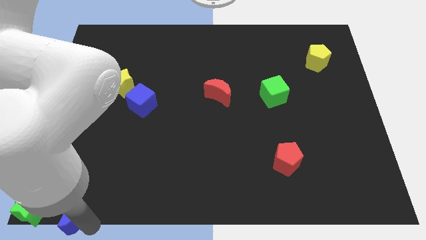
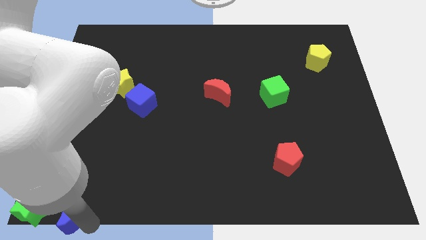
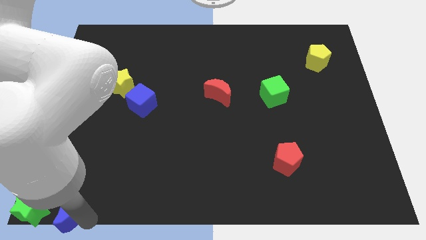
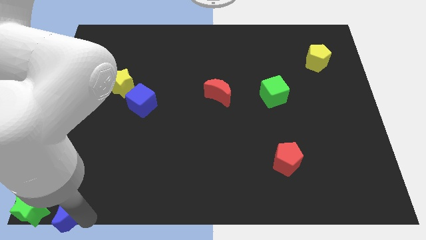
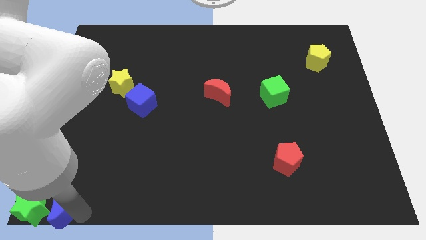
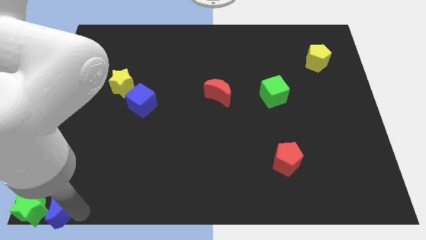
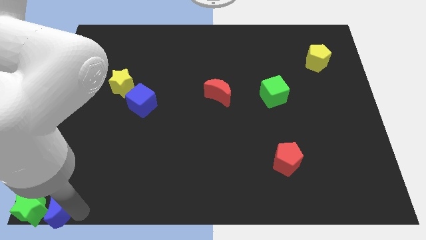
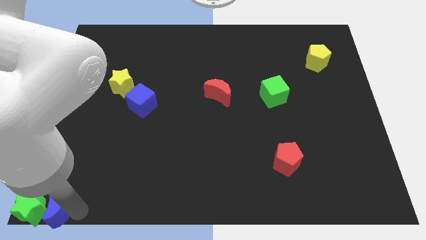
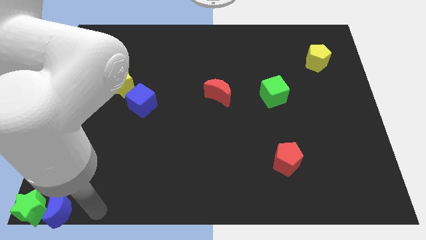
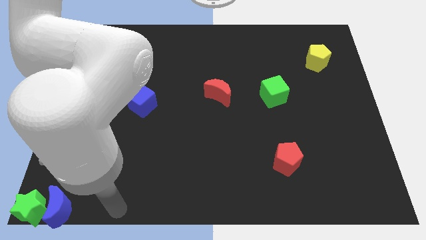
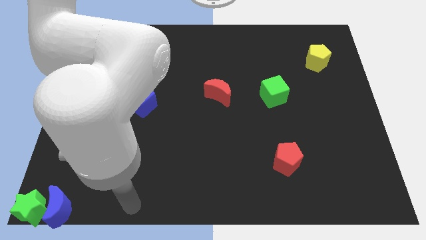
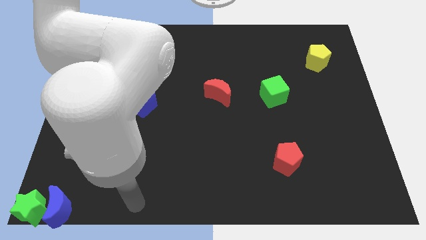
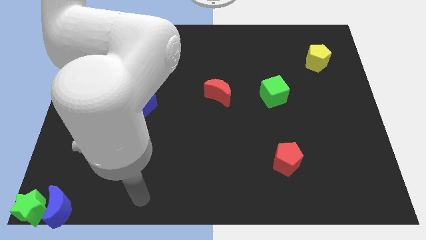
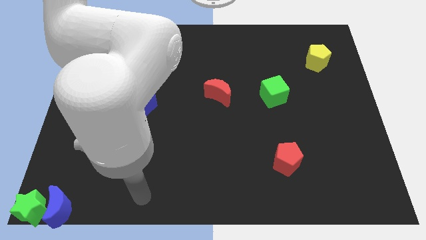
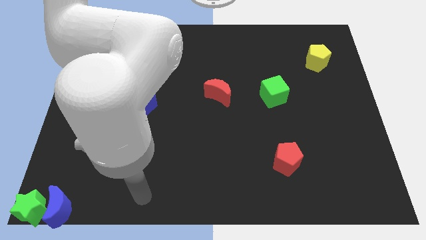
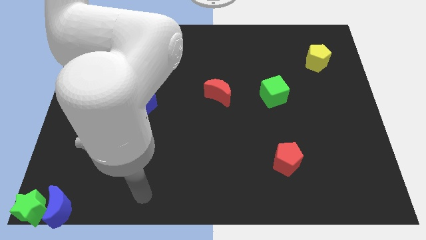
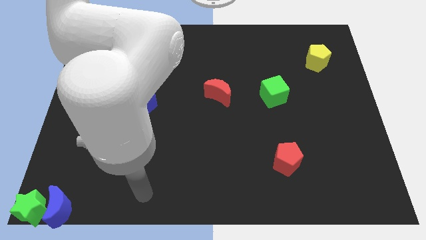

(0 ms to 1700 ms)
move the blue moon to the left of the green star

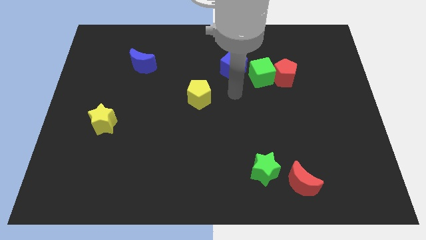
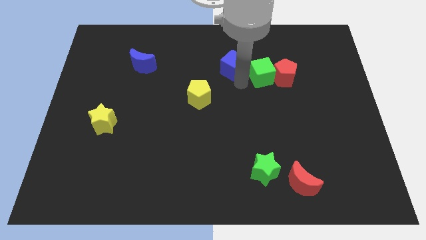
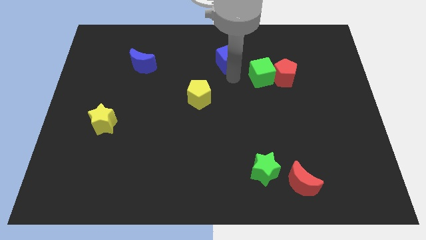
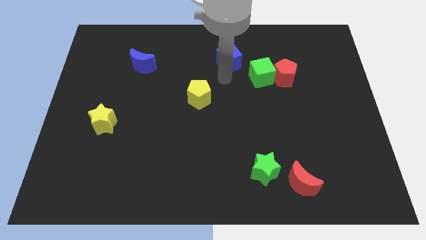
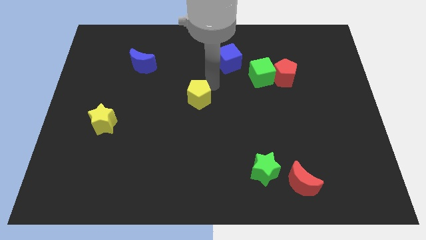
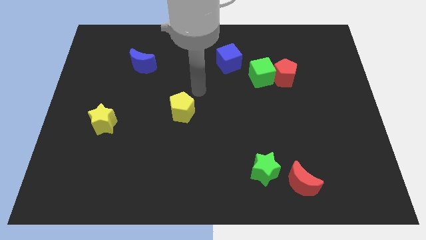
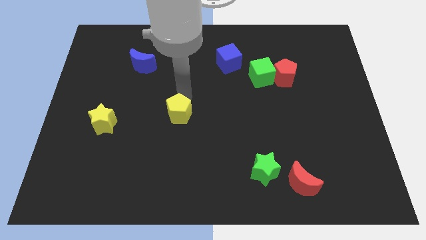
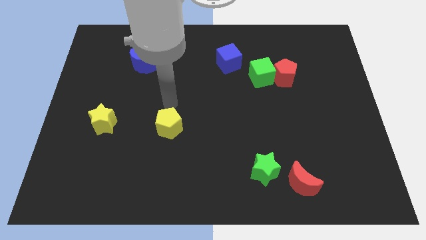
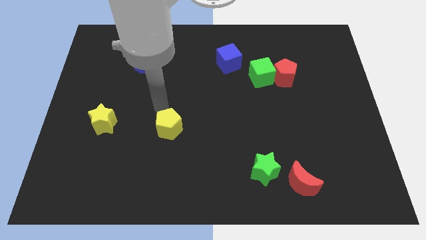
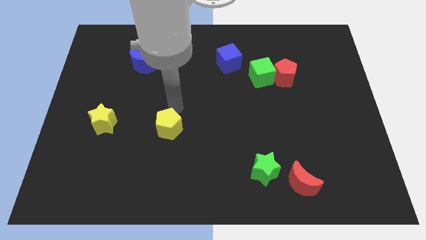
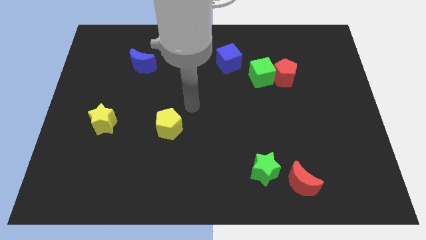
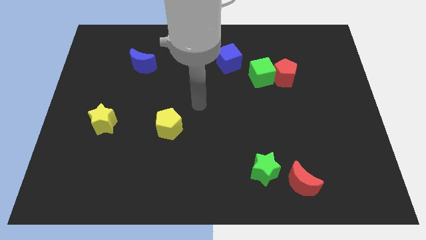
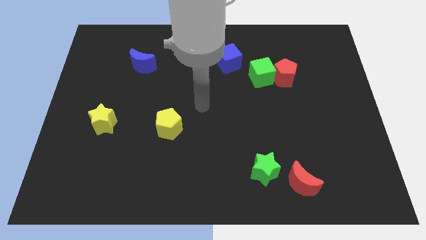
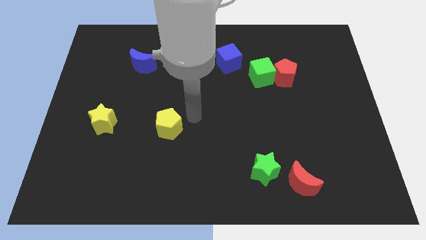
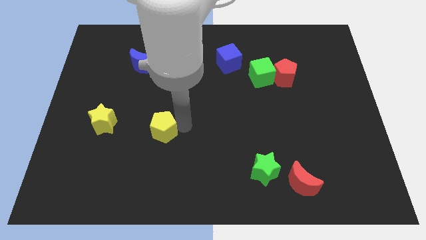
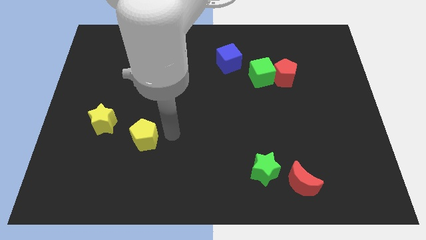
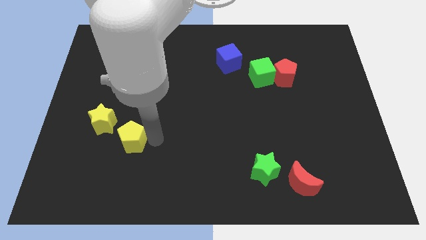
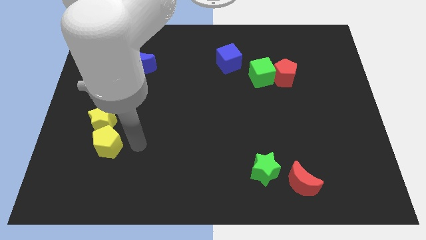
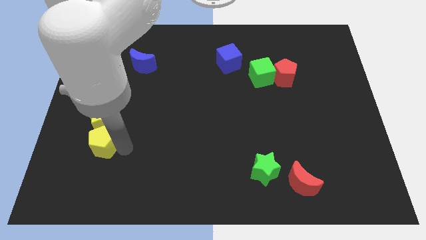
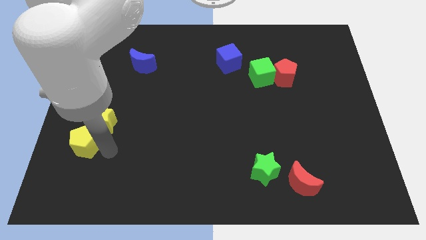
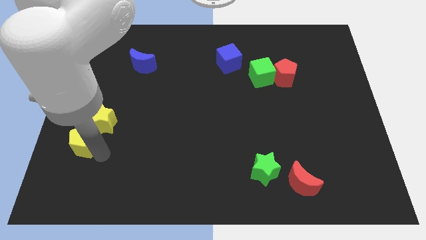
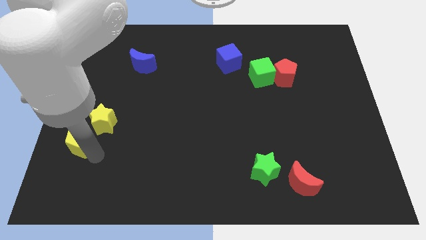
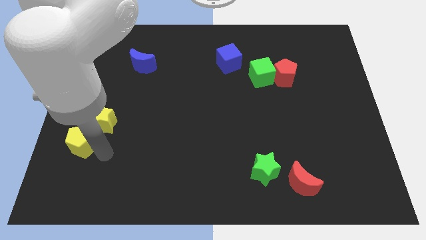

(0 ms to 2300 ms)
move the yellow pentagon below the yellow star

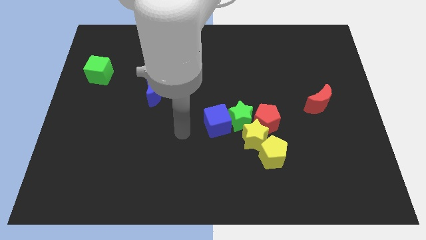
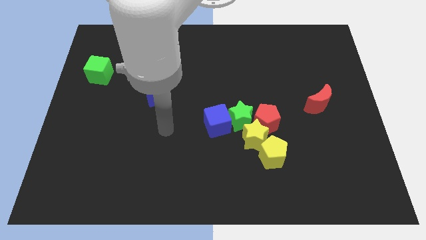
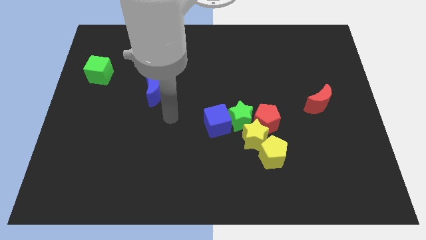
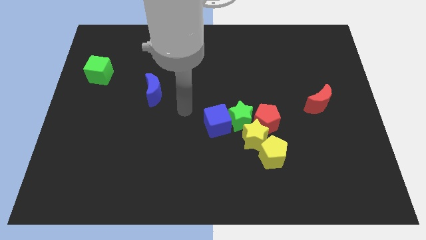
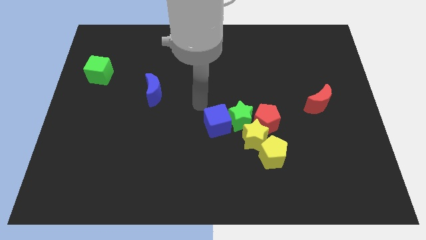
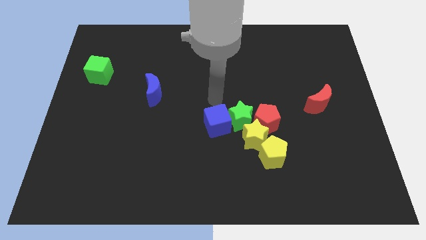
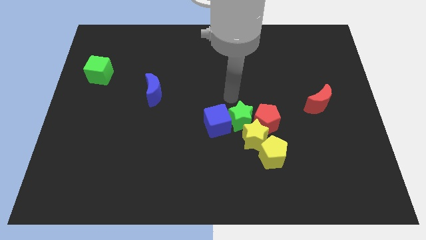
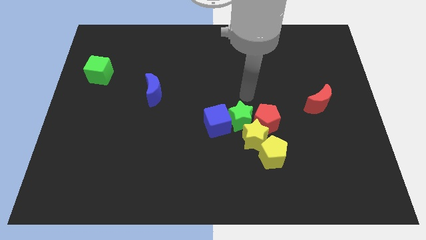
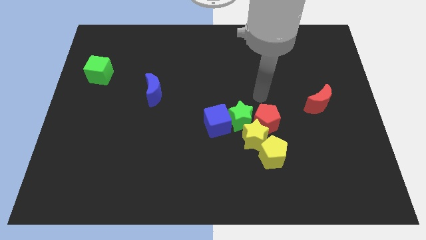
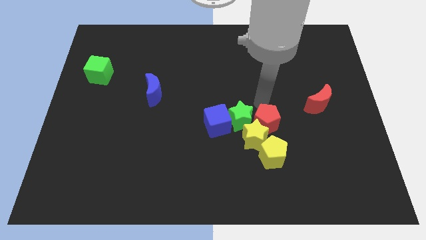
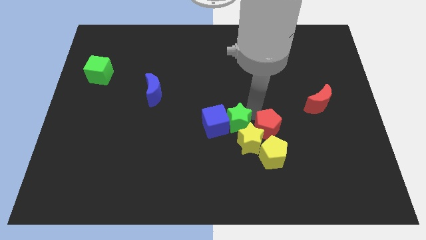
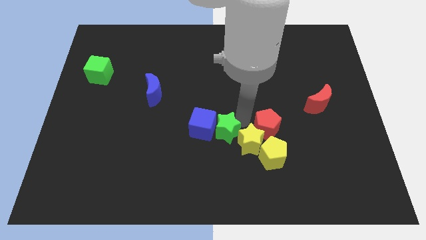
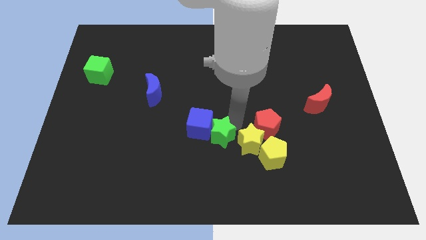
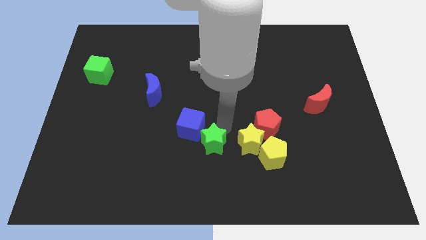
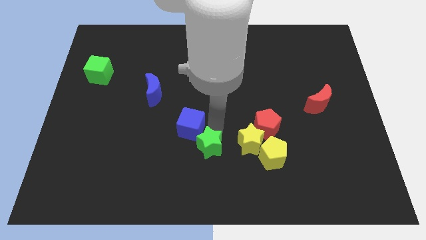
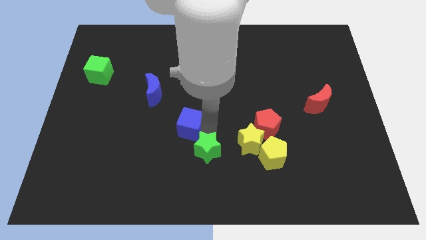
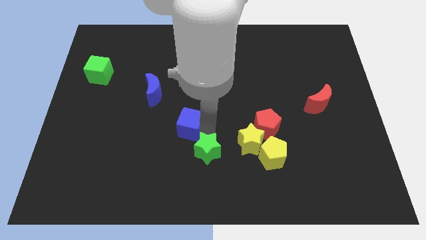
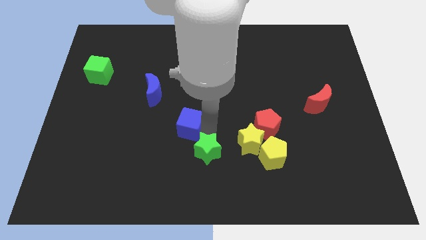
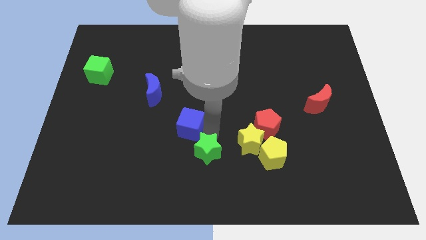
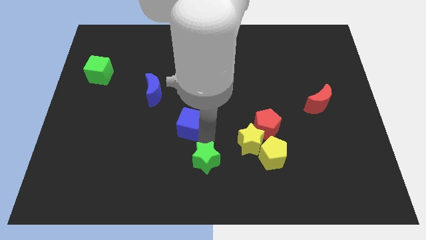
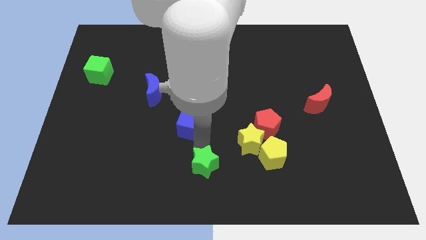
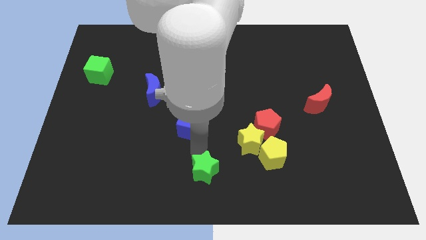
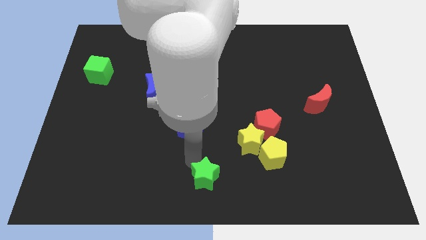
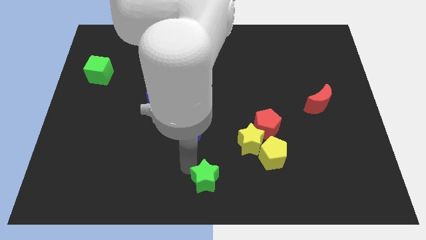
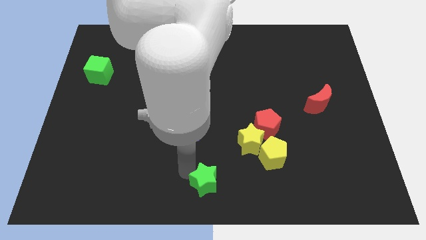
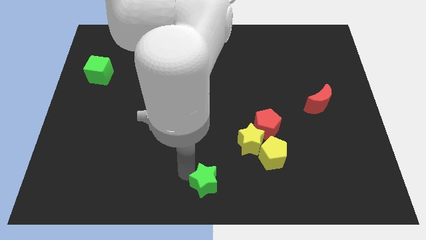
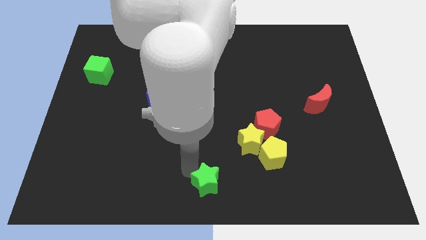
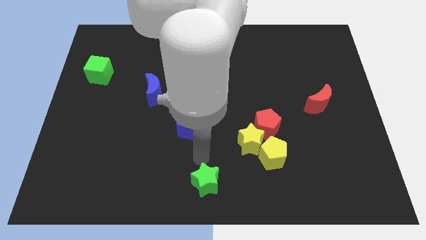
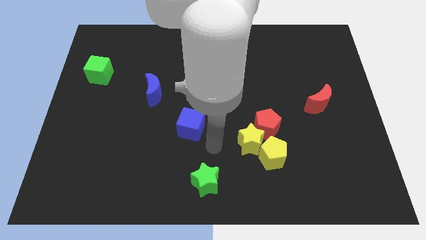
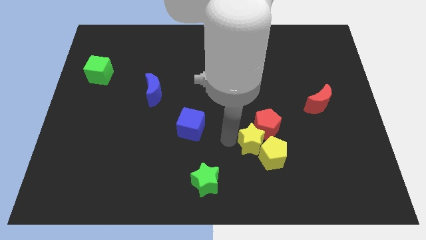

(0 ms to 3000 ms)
separate the green star from yellow star and blue cube

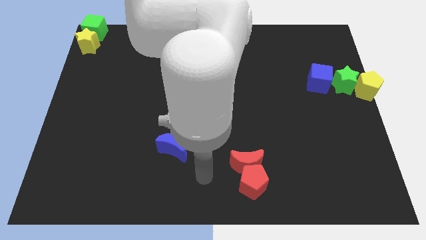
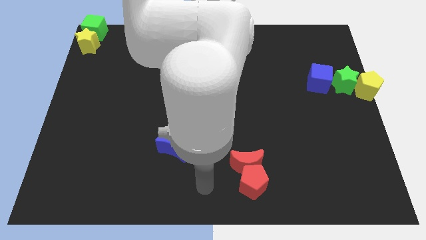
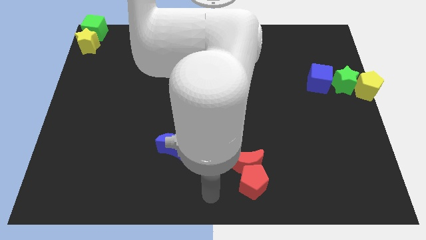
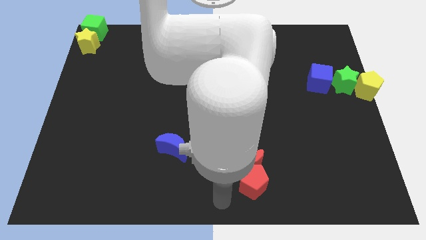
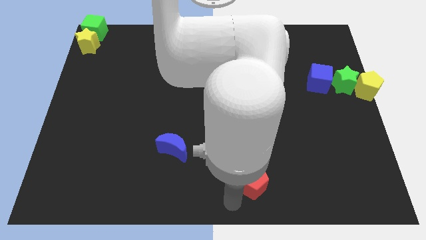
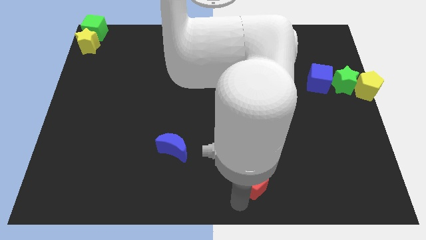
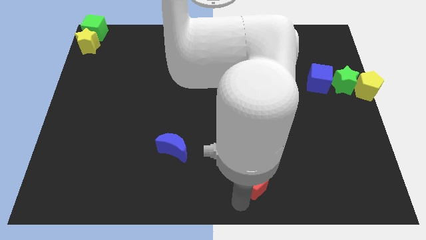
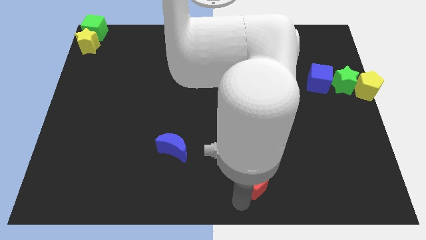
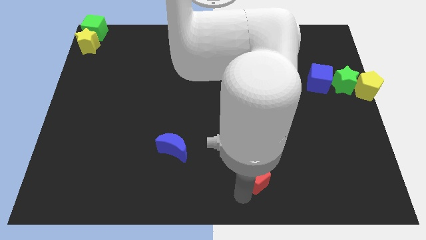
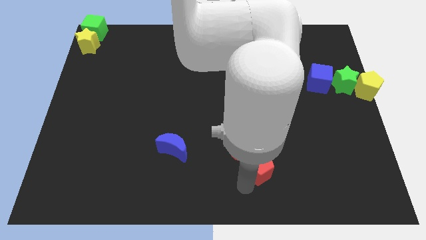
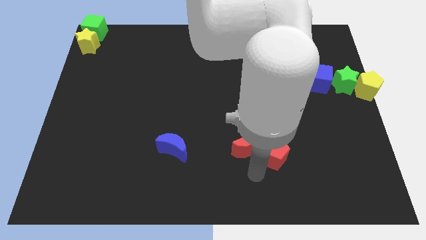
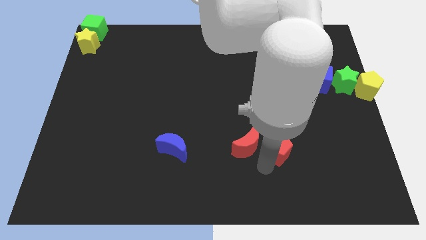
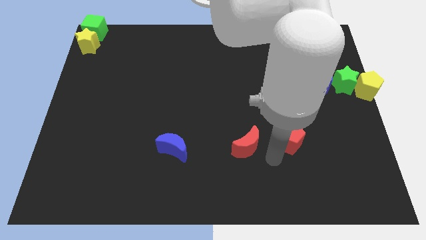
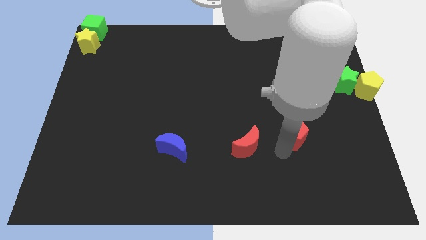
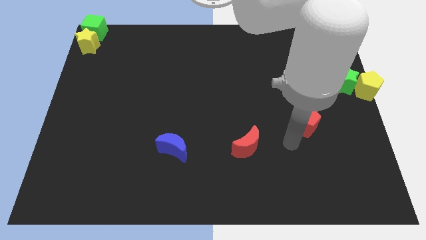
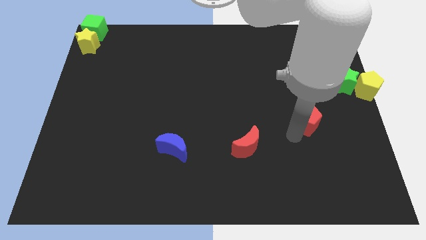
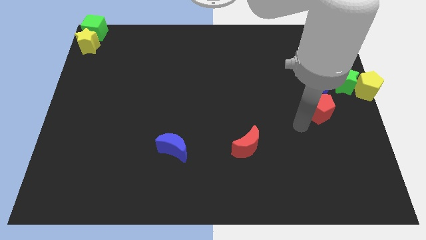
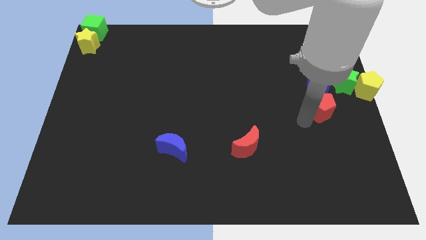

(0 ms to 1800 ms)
place the red pentagon below the blue cube

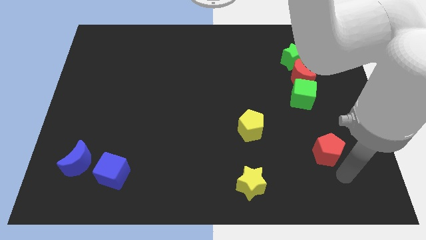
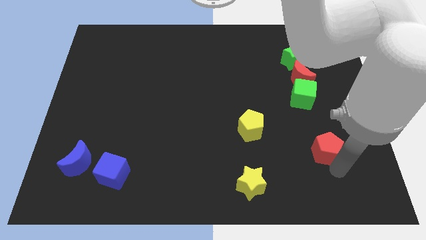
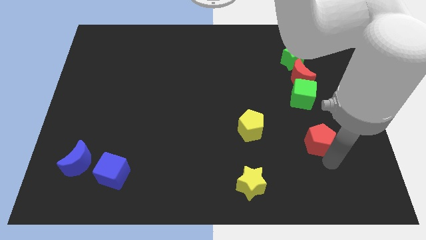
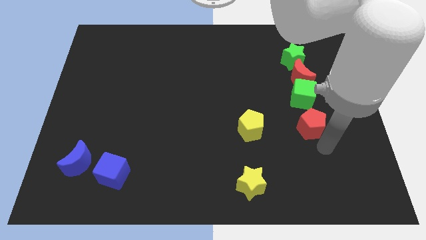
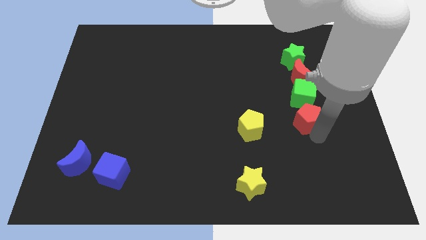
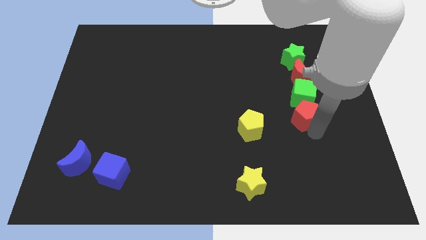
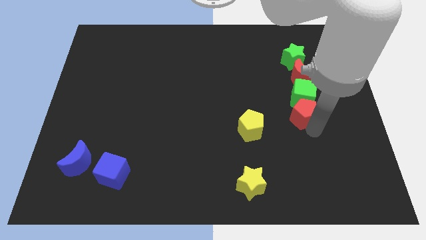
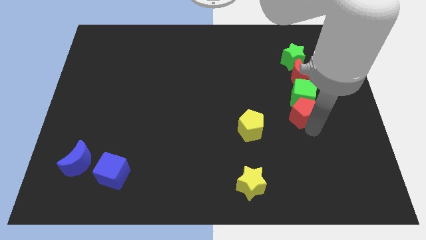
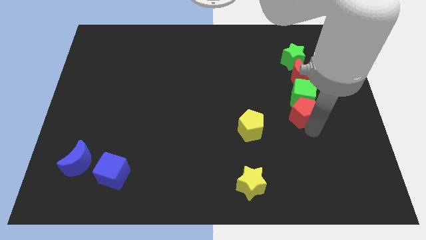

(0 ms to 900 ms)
place the red pentagon below the green cube
